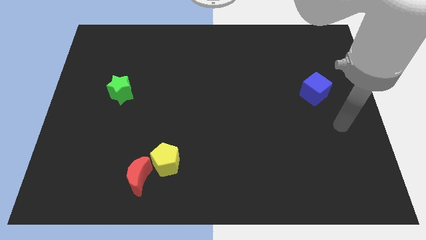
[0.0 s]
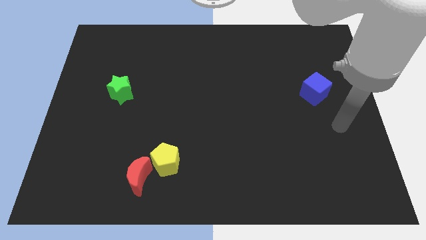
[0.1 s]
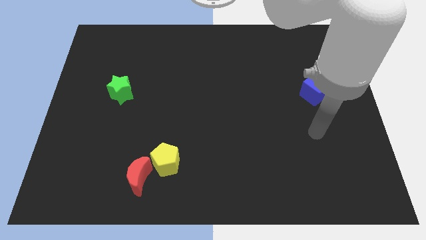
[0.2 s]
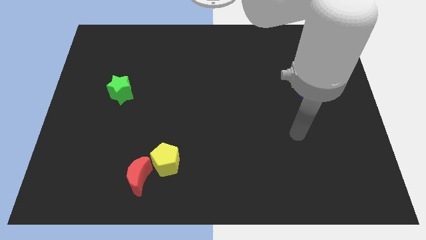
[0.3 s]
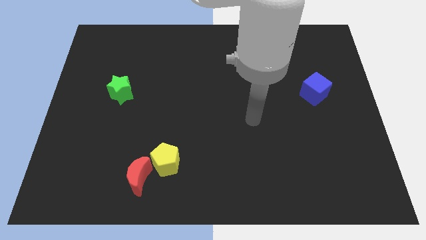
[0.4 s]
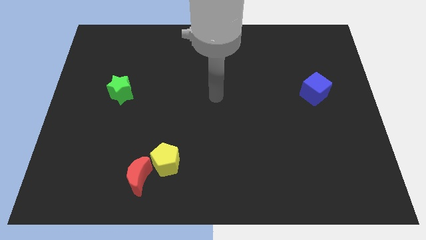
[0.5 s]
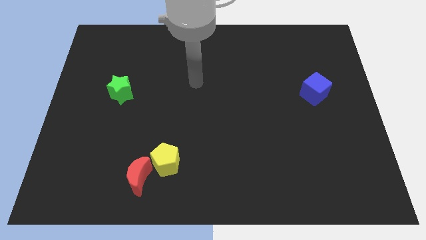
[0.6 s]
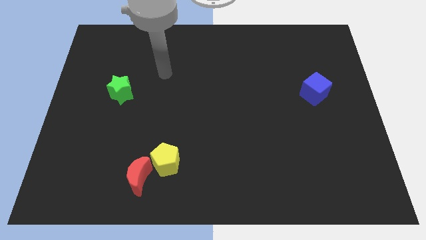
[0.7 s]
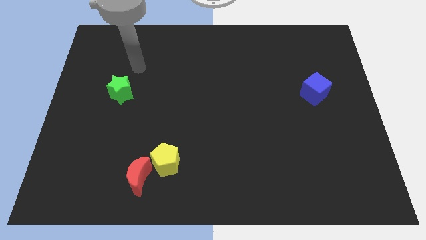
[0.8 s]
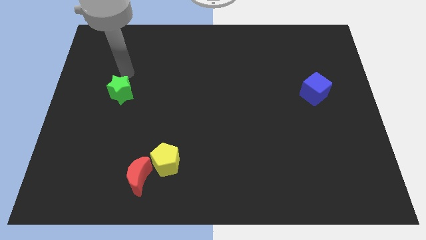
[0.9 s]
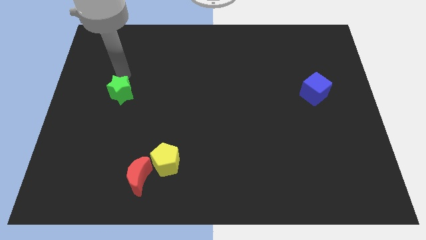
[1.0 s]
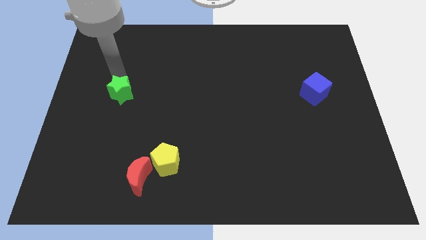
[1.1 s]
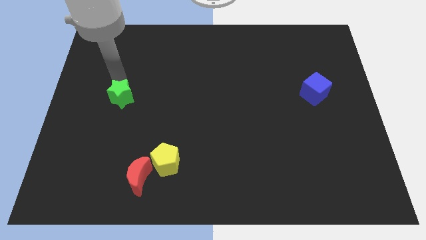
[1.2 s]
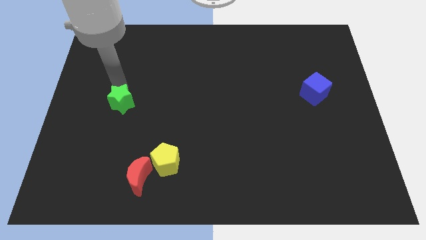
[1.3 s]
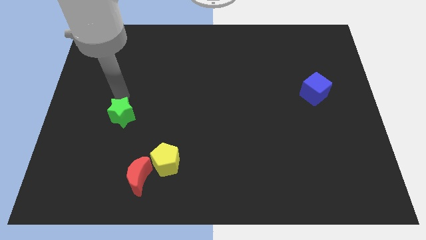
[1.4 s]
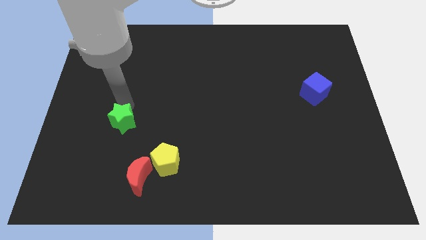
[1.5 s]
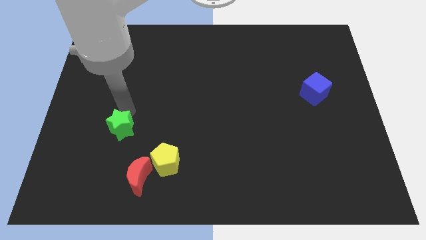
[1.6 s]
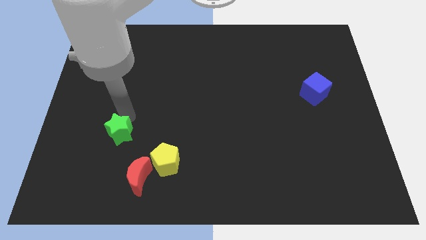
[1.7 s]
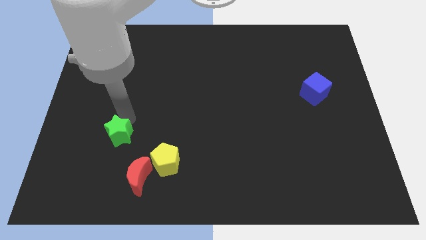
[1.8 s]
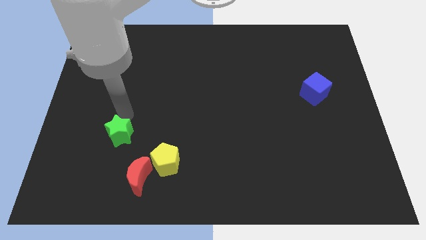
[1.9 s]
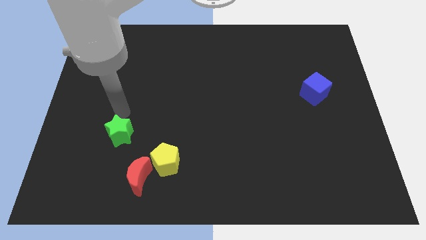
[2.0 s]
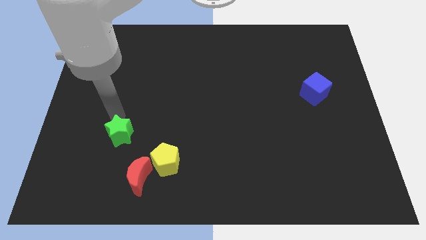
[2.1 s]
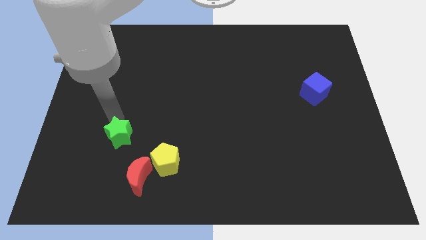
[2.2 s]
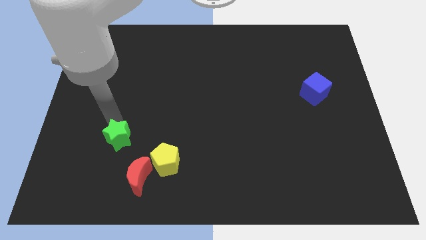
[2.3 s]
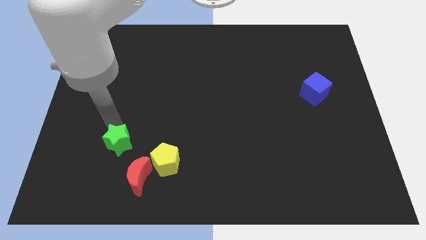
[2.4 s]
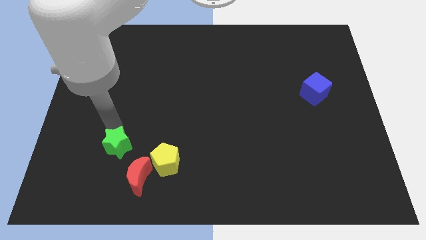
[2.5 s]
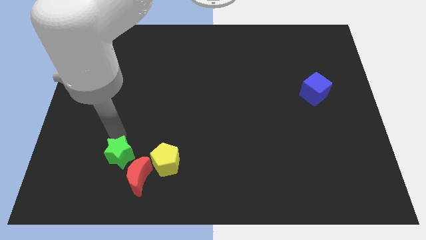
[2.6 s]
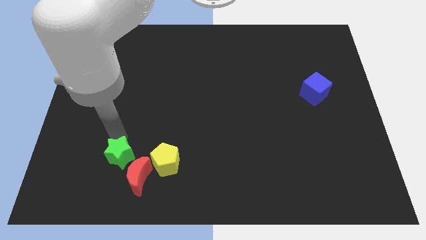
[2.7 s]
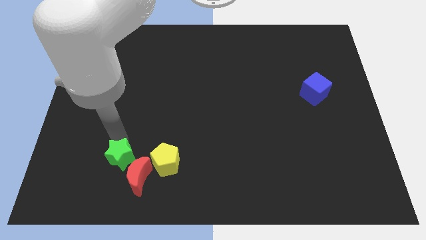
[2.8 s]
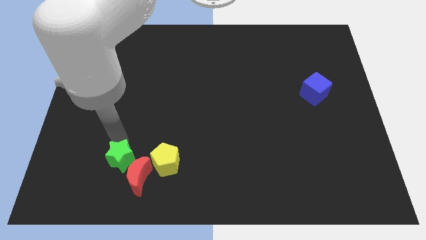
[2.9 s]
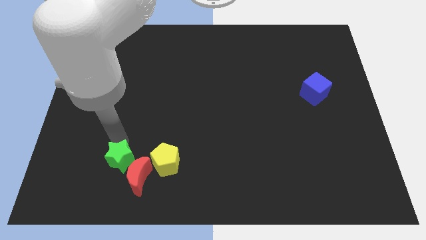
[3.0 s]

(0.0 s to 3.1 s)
move the green block towards the red block

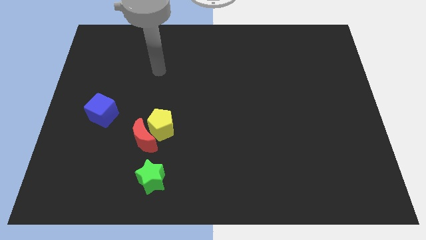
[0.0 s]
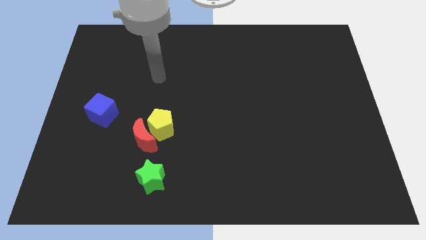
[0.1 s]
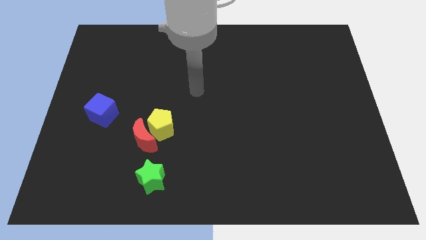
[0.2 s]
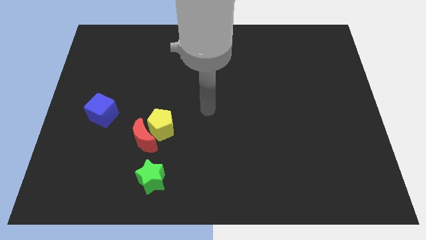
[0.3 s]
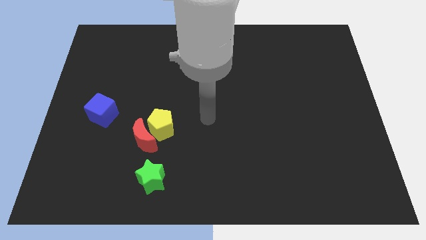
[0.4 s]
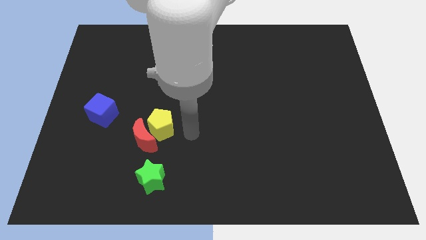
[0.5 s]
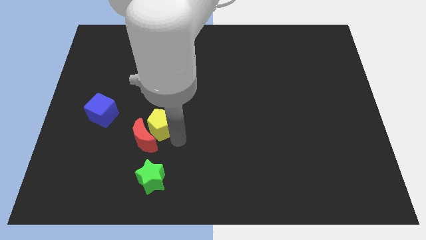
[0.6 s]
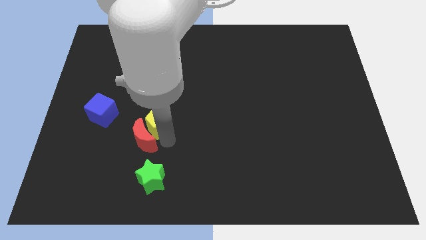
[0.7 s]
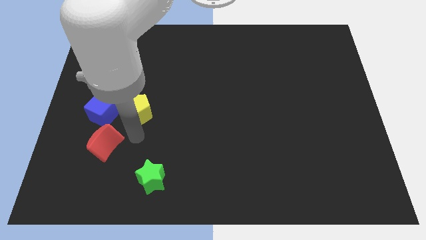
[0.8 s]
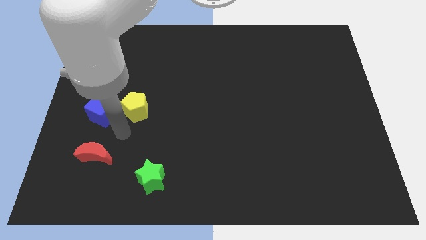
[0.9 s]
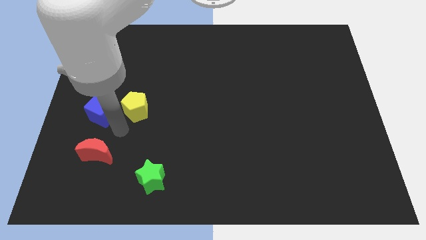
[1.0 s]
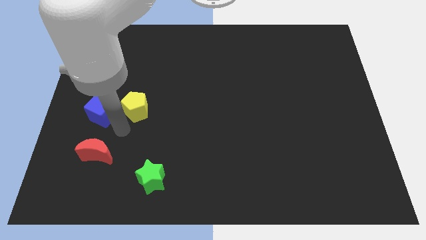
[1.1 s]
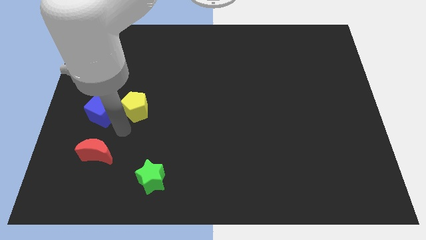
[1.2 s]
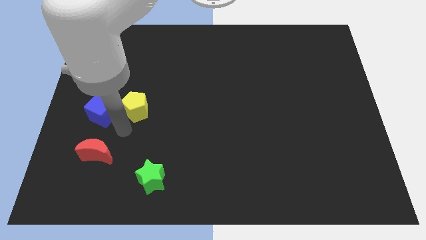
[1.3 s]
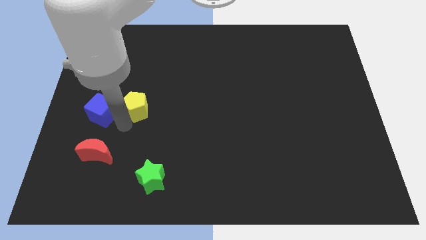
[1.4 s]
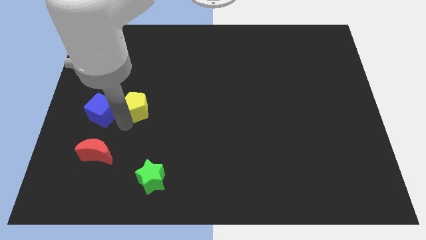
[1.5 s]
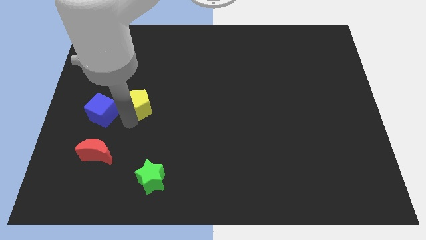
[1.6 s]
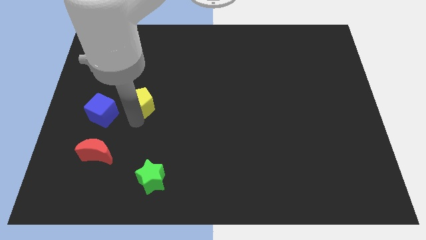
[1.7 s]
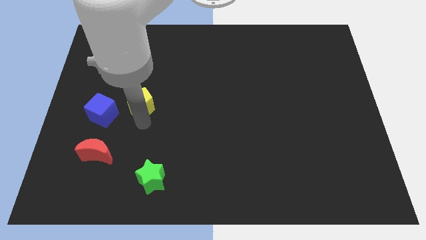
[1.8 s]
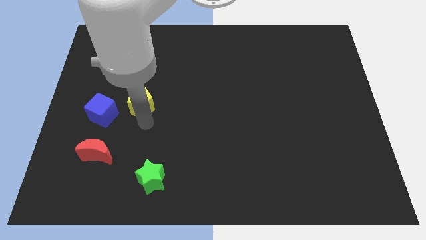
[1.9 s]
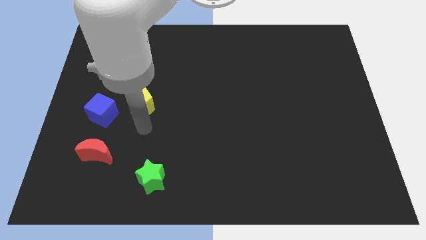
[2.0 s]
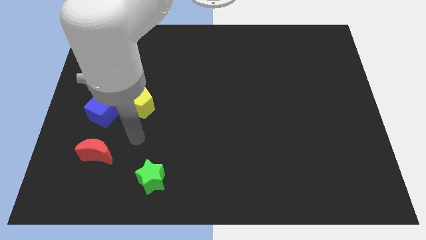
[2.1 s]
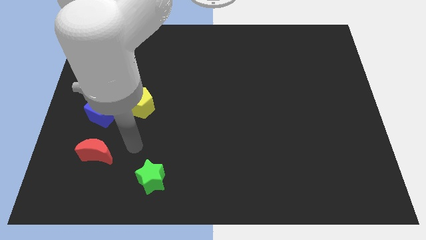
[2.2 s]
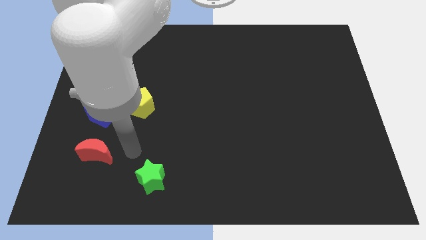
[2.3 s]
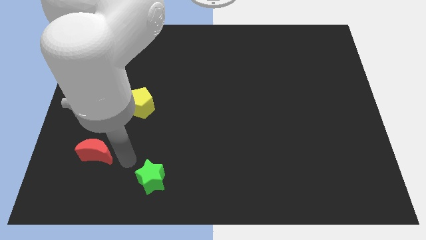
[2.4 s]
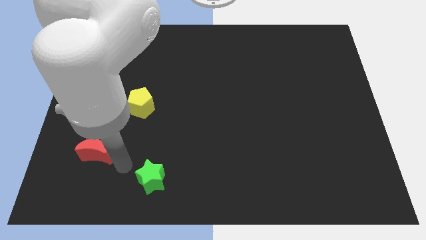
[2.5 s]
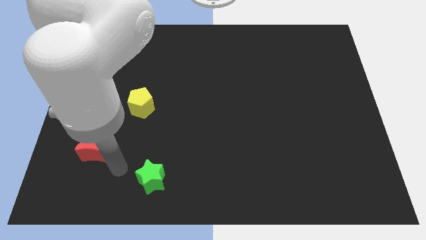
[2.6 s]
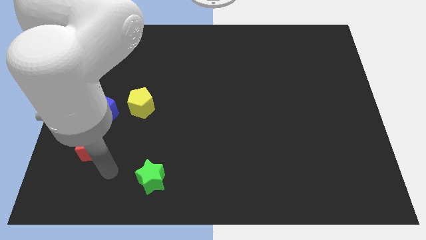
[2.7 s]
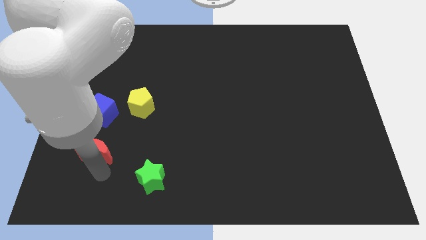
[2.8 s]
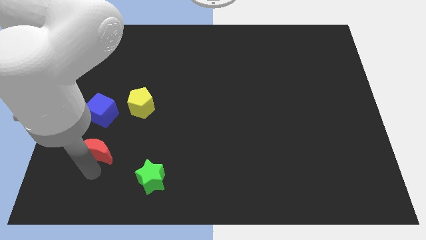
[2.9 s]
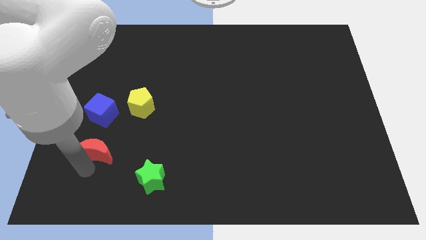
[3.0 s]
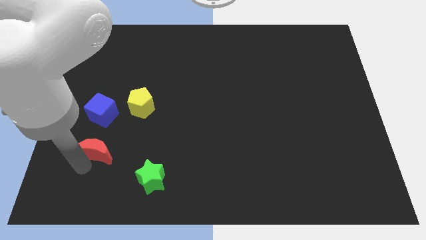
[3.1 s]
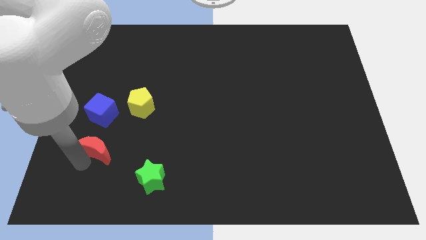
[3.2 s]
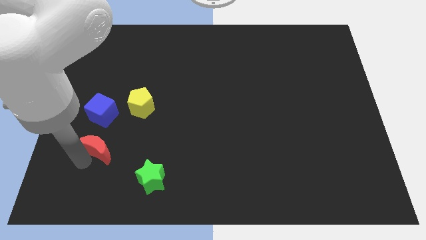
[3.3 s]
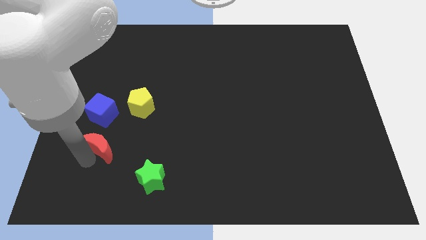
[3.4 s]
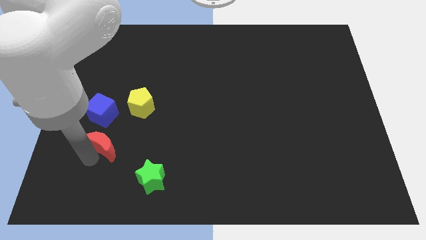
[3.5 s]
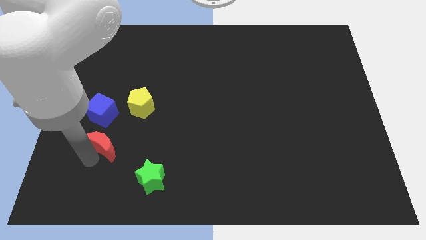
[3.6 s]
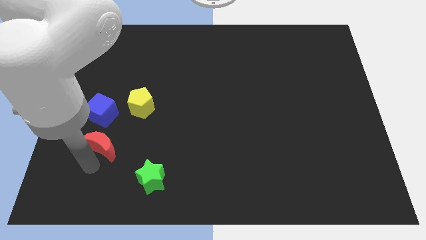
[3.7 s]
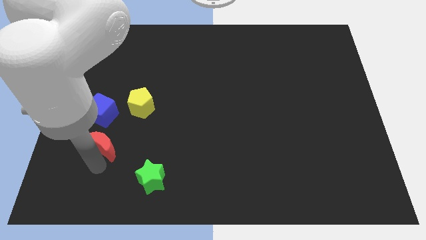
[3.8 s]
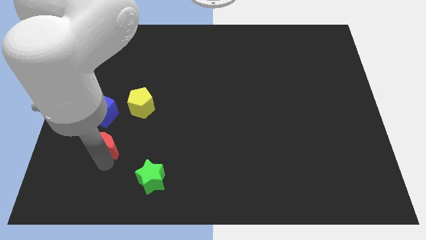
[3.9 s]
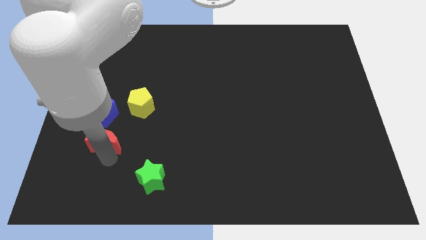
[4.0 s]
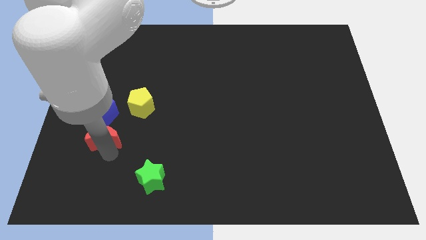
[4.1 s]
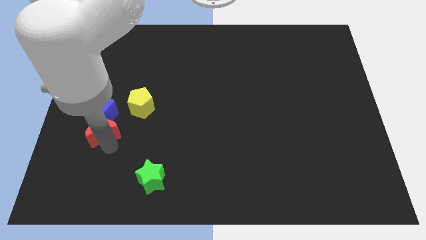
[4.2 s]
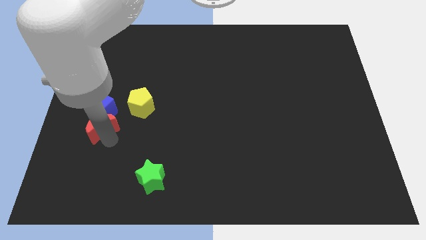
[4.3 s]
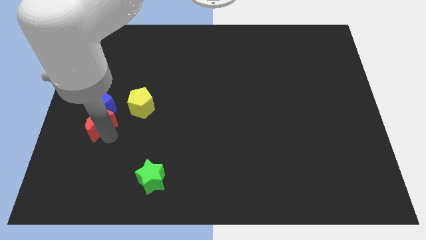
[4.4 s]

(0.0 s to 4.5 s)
move the red block close to the cube

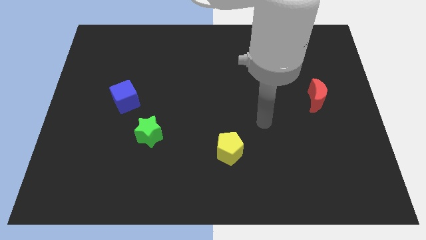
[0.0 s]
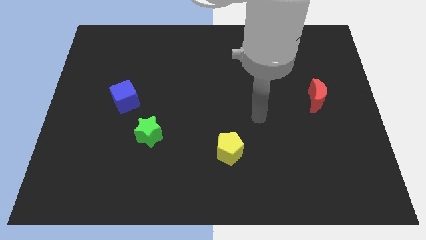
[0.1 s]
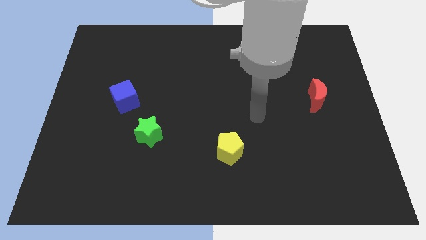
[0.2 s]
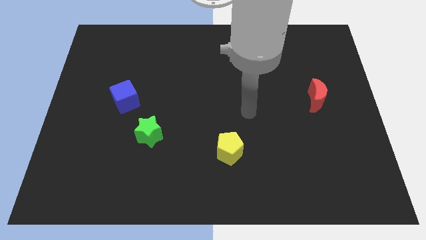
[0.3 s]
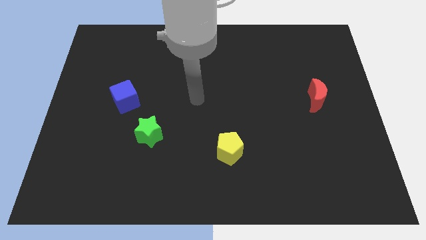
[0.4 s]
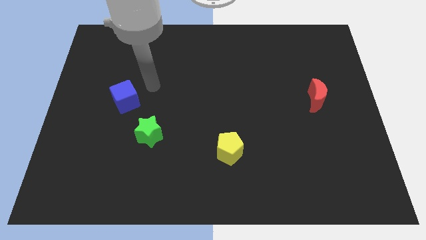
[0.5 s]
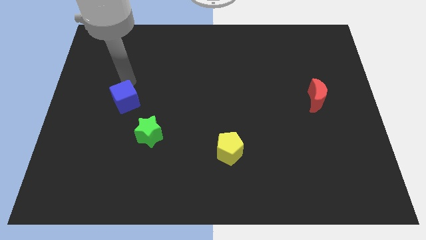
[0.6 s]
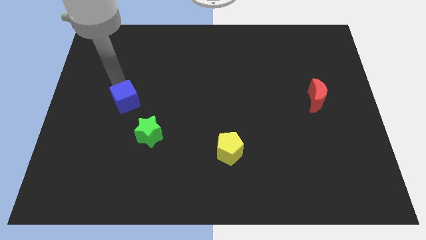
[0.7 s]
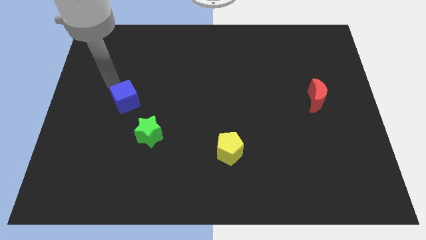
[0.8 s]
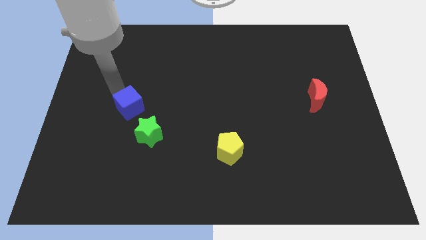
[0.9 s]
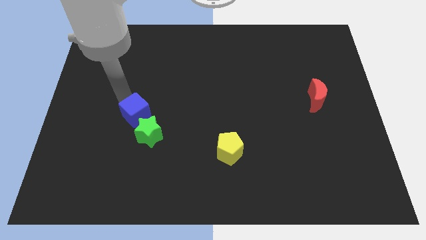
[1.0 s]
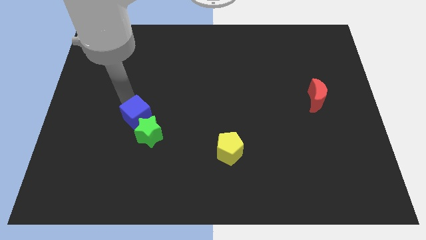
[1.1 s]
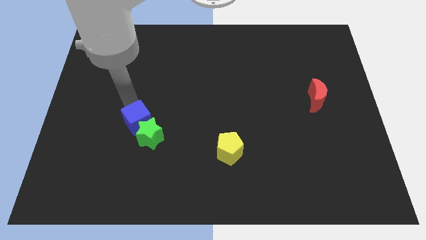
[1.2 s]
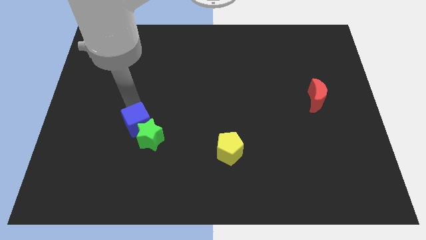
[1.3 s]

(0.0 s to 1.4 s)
slide the cube towards the green star
